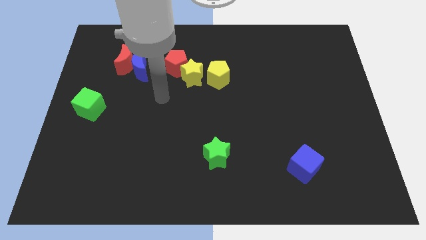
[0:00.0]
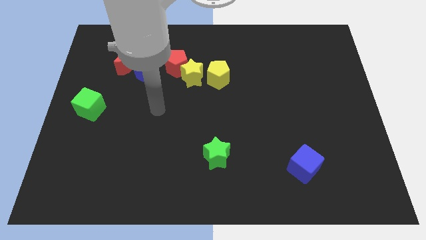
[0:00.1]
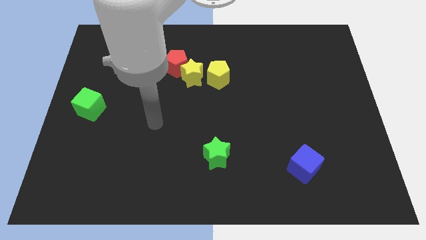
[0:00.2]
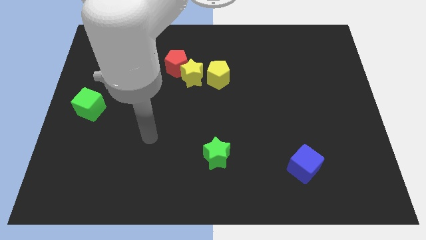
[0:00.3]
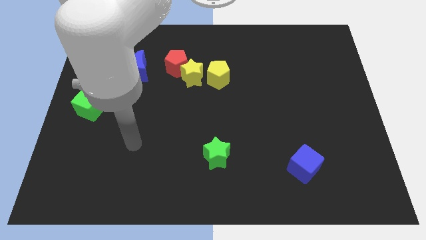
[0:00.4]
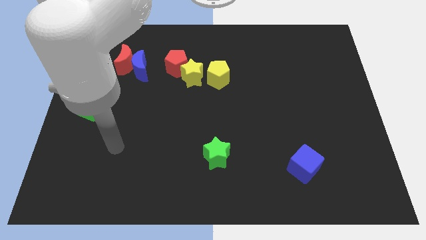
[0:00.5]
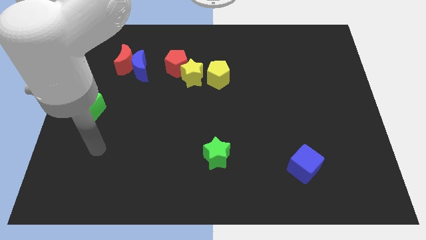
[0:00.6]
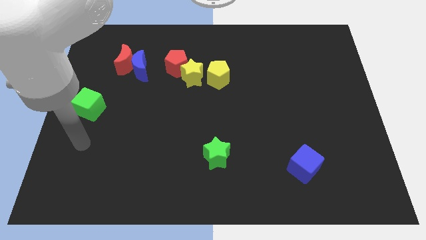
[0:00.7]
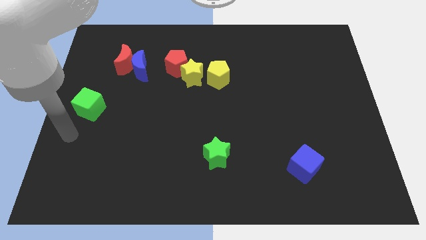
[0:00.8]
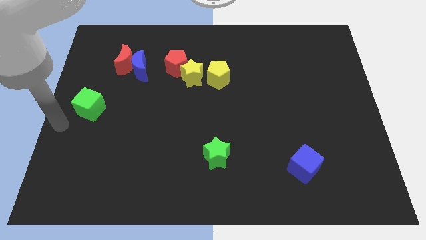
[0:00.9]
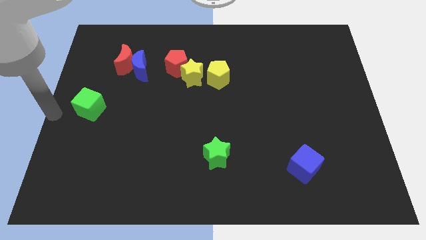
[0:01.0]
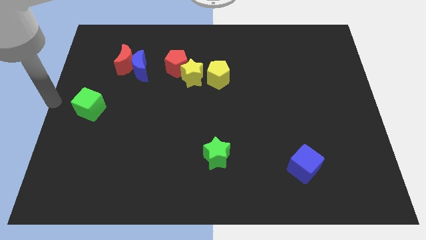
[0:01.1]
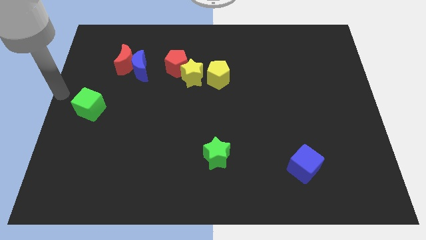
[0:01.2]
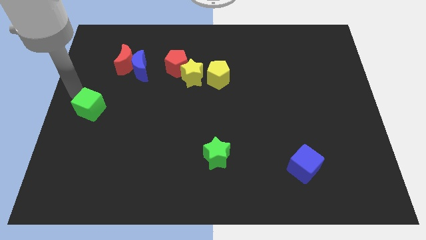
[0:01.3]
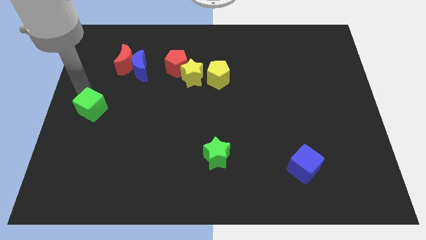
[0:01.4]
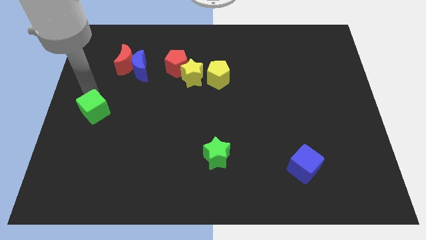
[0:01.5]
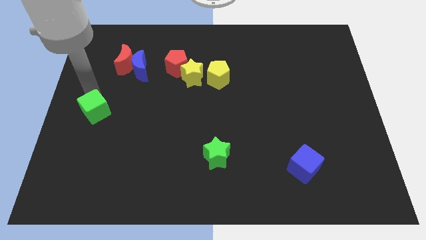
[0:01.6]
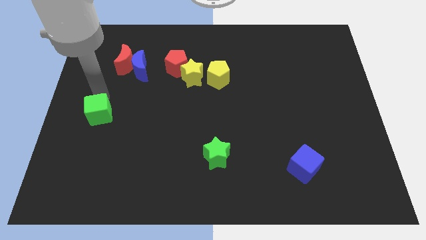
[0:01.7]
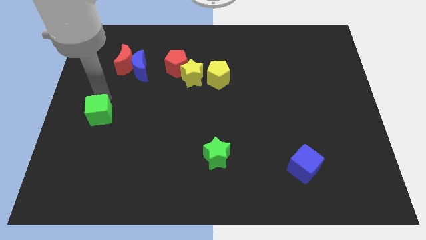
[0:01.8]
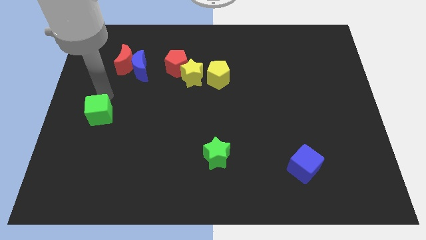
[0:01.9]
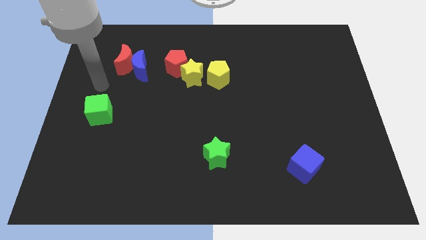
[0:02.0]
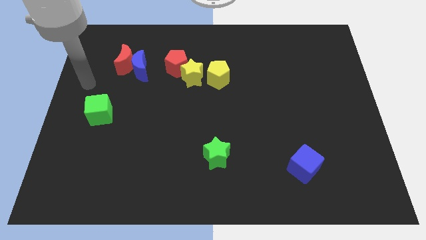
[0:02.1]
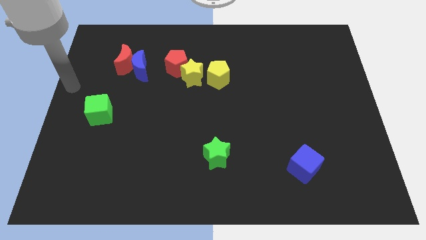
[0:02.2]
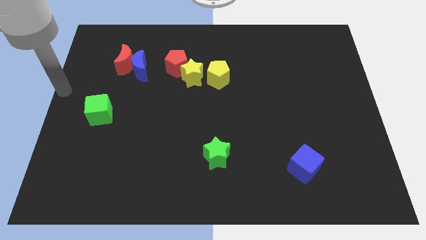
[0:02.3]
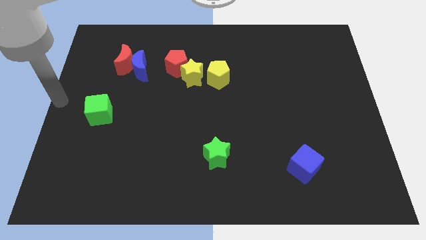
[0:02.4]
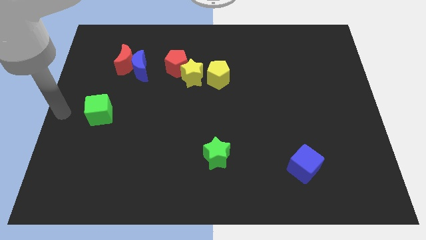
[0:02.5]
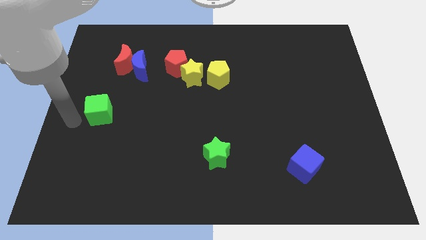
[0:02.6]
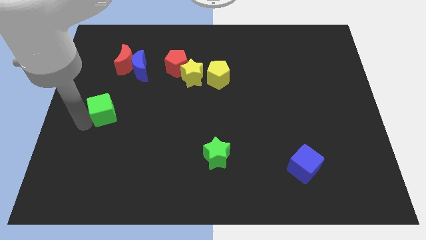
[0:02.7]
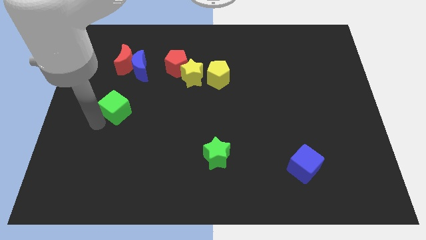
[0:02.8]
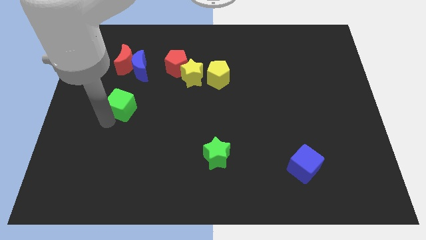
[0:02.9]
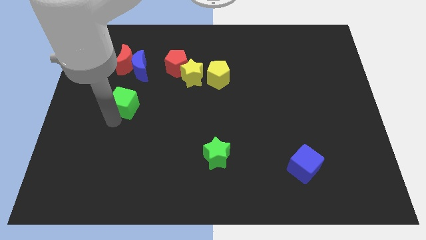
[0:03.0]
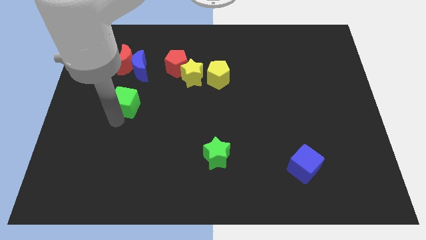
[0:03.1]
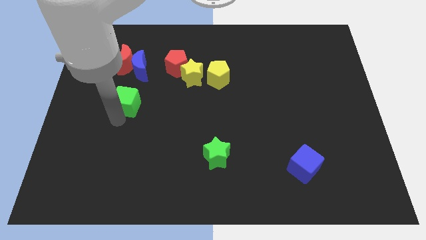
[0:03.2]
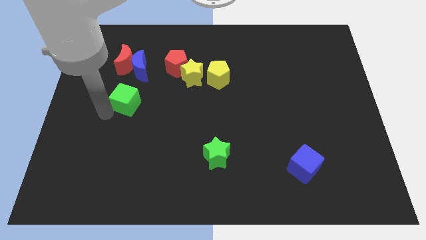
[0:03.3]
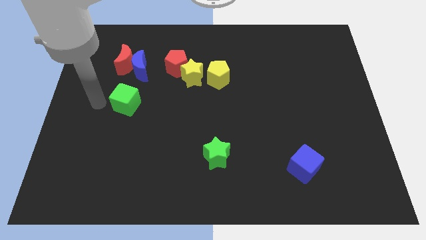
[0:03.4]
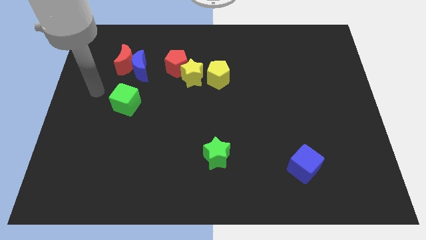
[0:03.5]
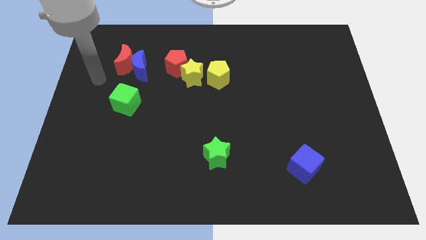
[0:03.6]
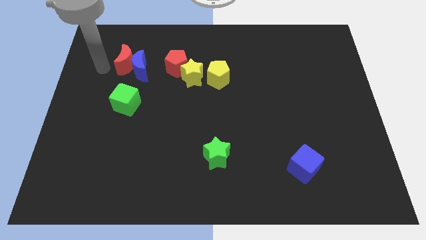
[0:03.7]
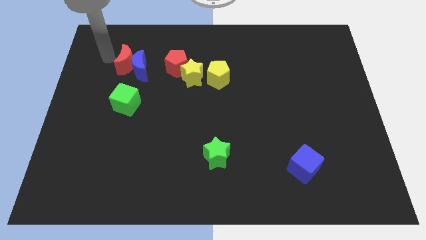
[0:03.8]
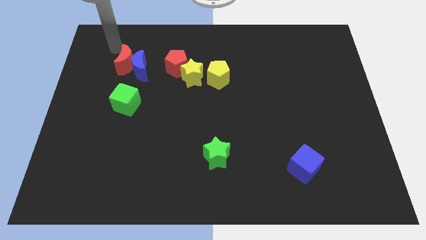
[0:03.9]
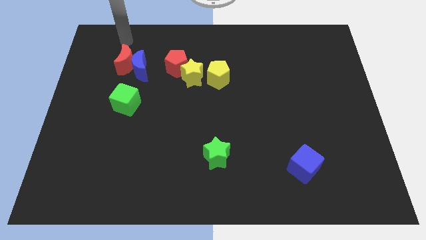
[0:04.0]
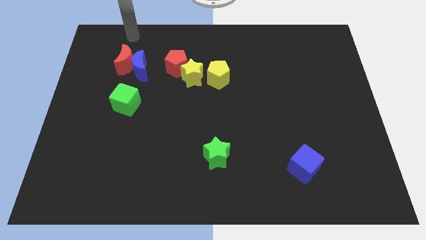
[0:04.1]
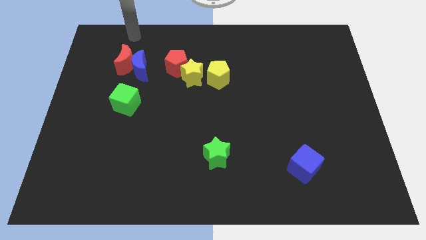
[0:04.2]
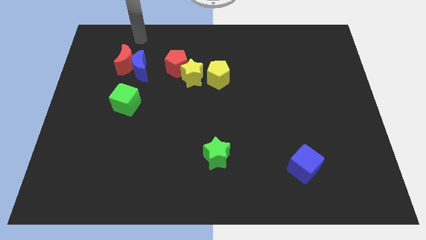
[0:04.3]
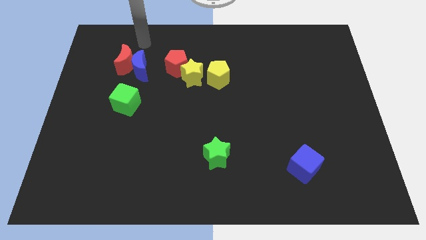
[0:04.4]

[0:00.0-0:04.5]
push the green cube slightly to the right

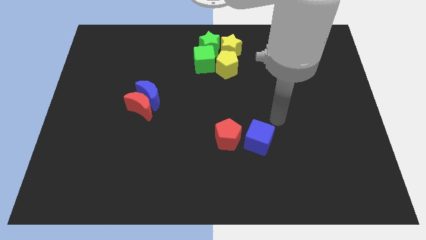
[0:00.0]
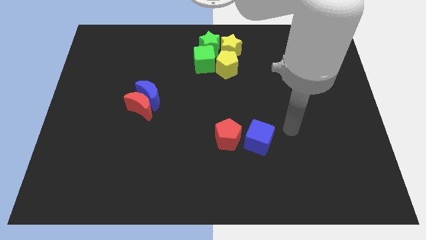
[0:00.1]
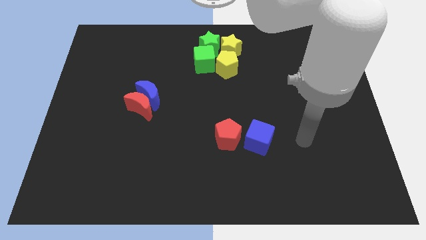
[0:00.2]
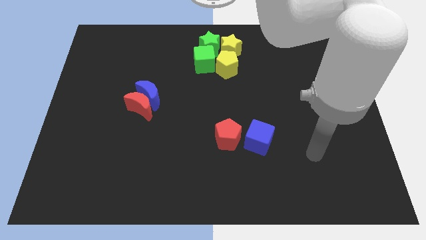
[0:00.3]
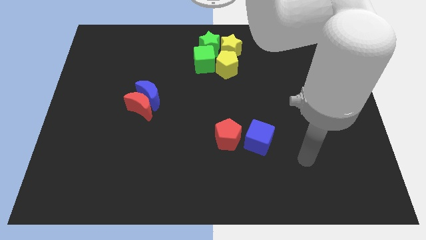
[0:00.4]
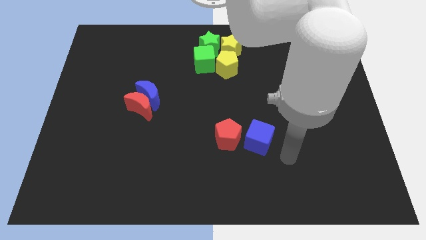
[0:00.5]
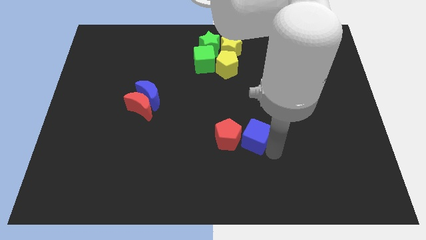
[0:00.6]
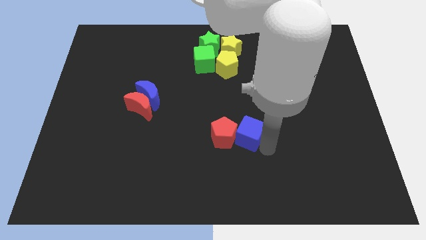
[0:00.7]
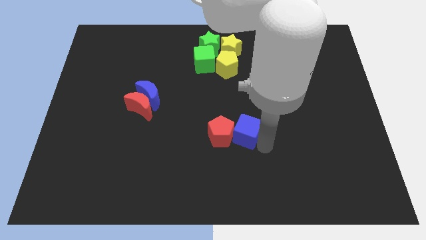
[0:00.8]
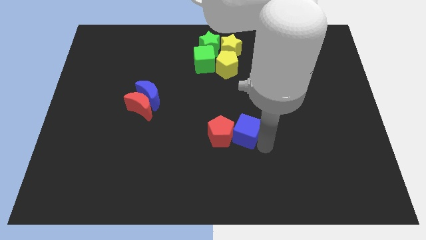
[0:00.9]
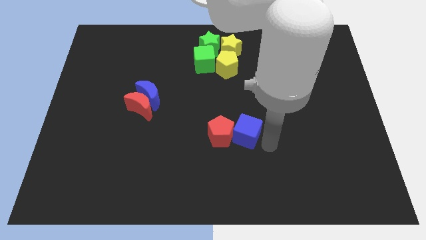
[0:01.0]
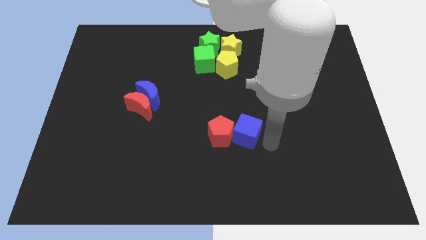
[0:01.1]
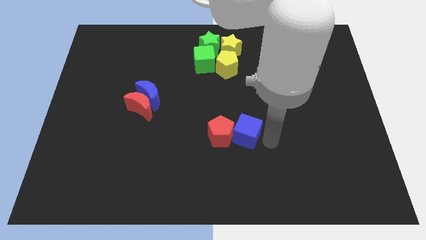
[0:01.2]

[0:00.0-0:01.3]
push the blue cube into the red pentagon

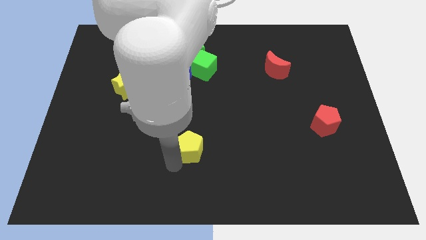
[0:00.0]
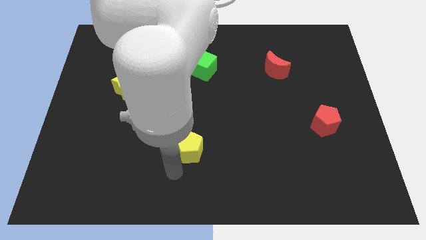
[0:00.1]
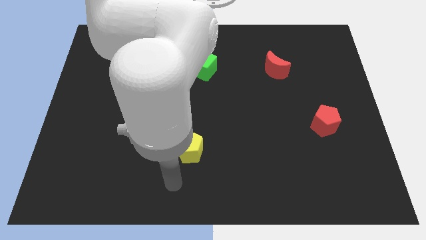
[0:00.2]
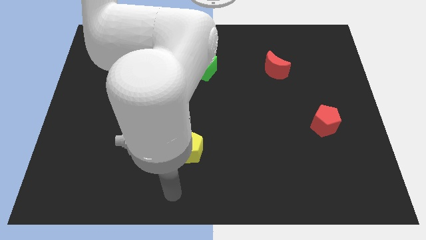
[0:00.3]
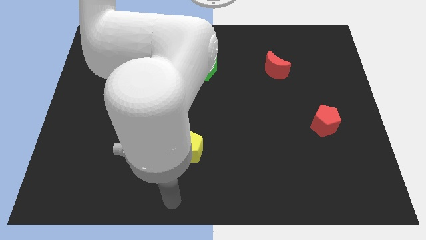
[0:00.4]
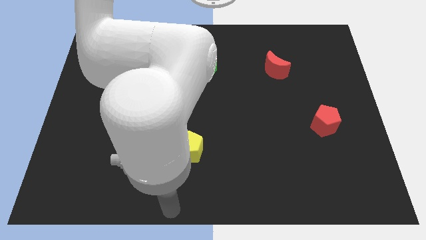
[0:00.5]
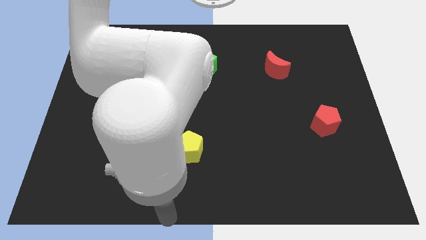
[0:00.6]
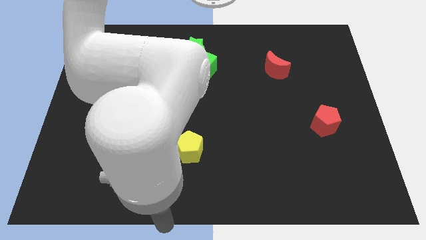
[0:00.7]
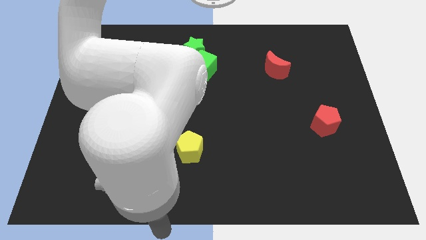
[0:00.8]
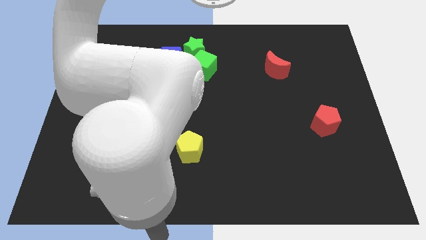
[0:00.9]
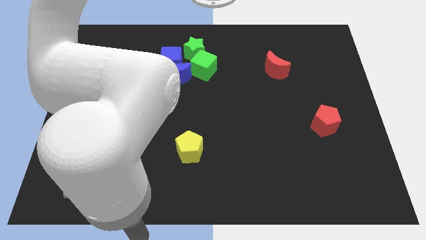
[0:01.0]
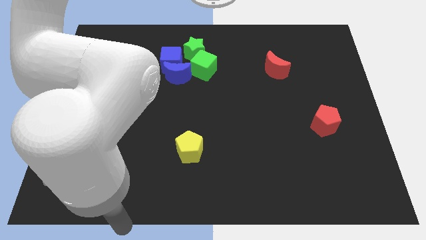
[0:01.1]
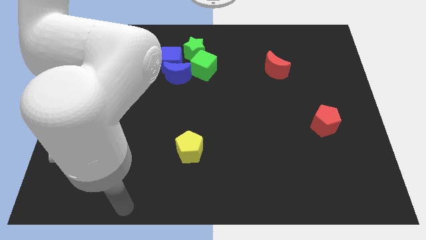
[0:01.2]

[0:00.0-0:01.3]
go to the bottom side of the table

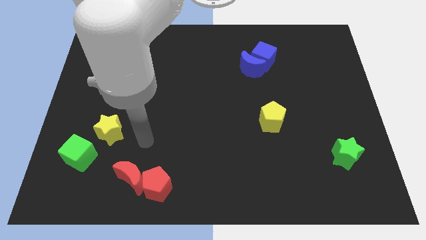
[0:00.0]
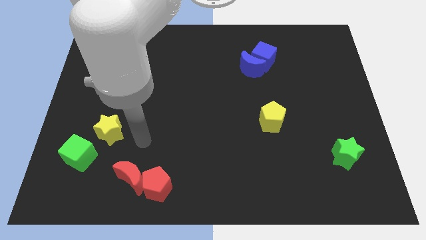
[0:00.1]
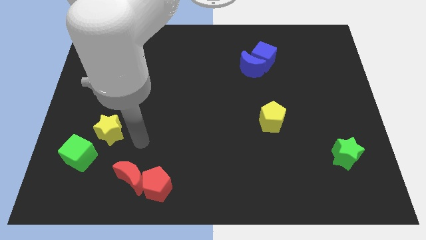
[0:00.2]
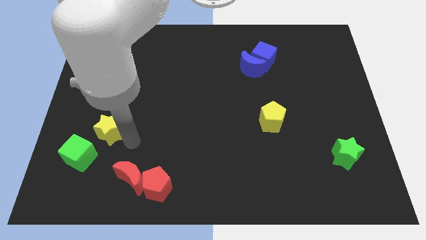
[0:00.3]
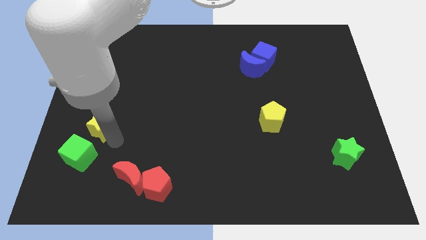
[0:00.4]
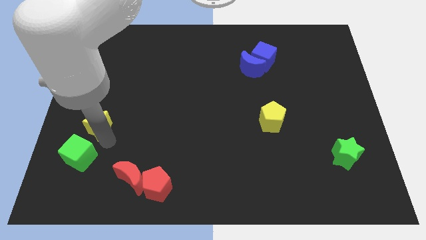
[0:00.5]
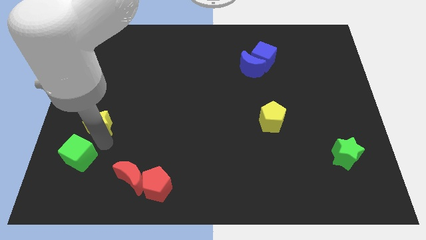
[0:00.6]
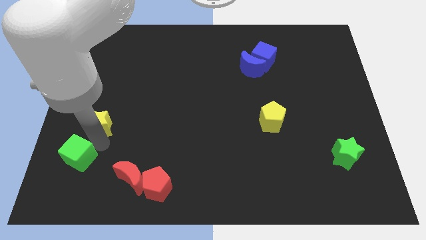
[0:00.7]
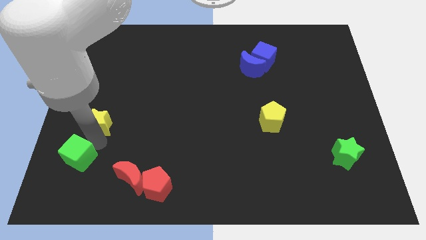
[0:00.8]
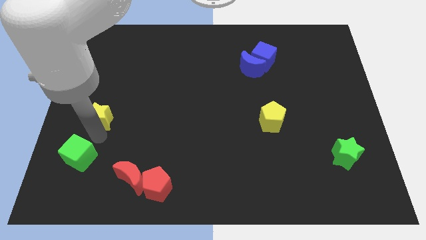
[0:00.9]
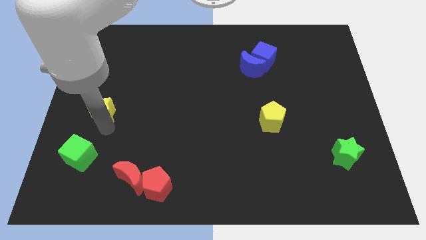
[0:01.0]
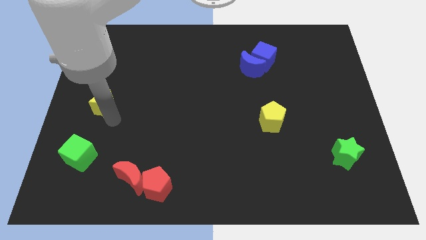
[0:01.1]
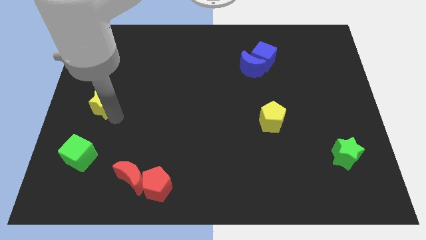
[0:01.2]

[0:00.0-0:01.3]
move the yellow star slightly up

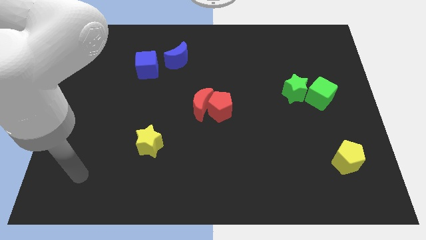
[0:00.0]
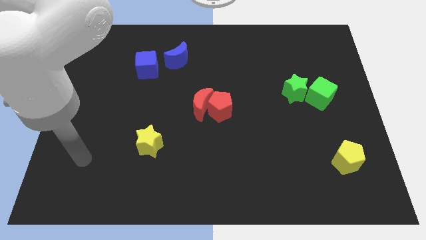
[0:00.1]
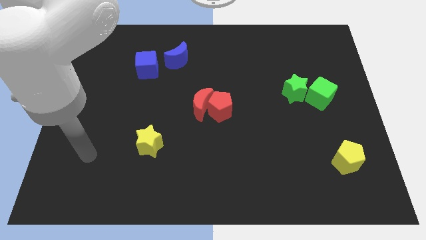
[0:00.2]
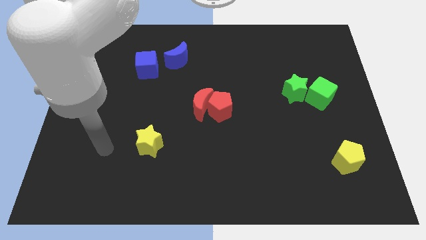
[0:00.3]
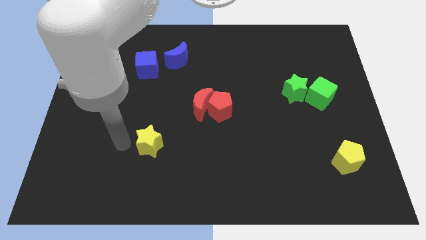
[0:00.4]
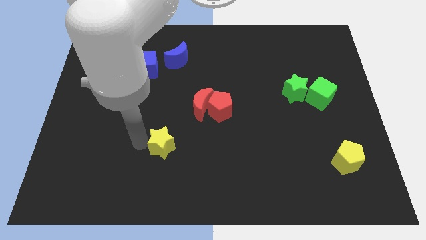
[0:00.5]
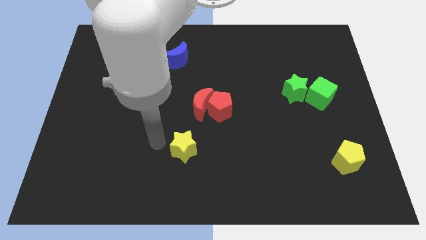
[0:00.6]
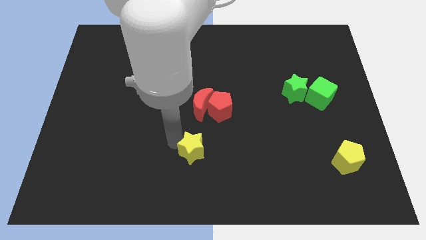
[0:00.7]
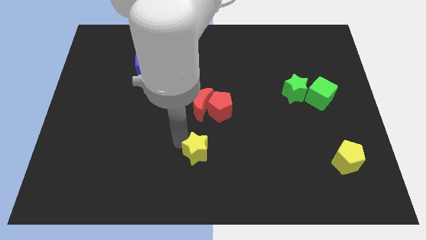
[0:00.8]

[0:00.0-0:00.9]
move the yellow star to the bottom of the red crescent
